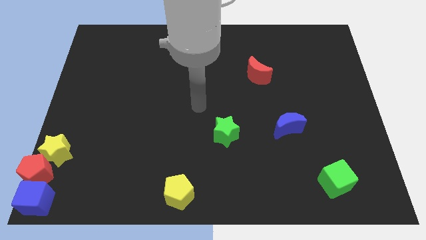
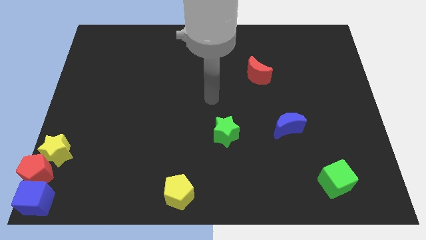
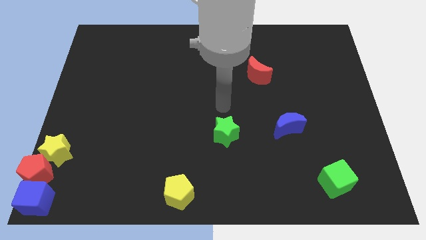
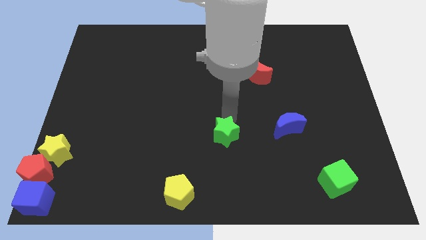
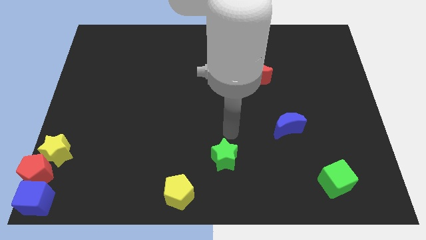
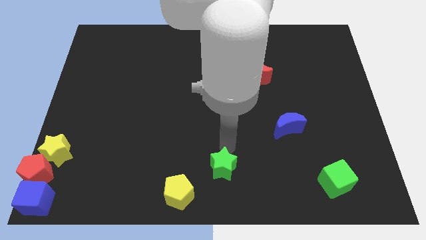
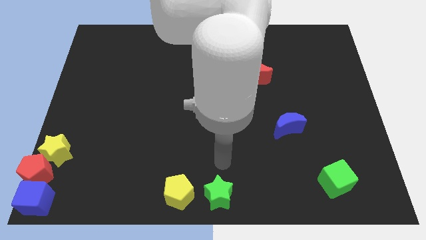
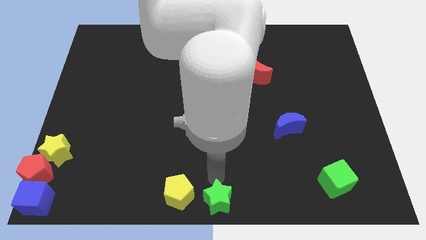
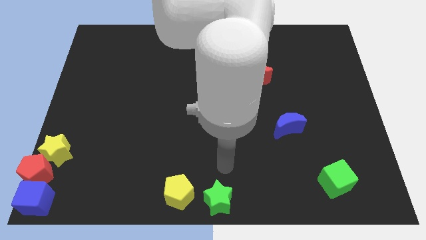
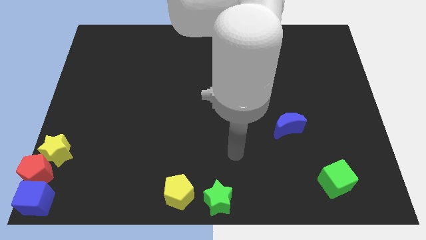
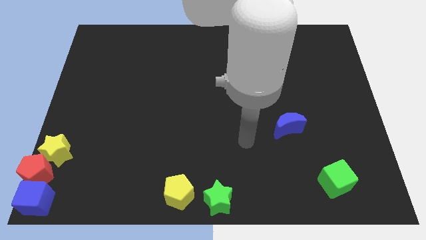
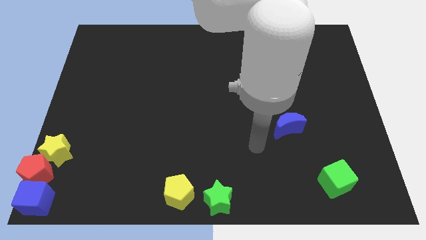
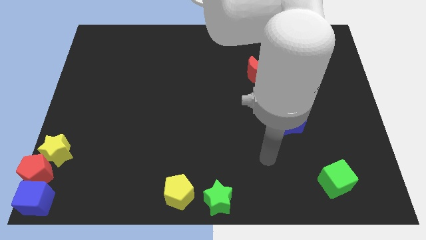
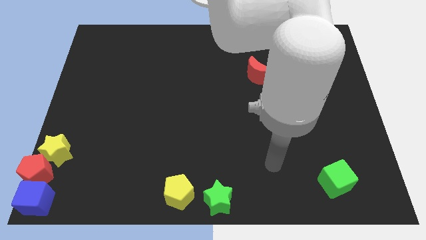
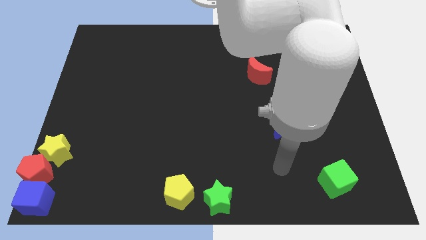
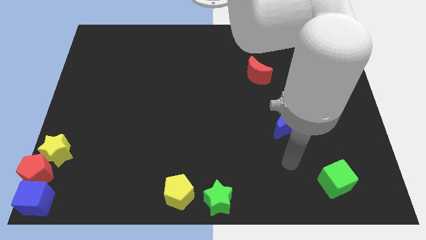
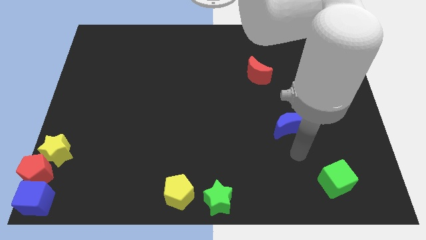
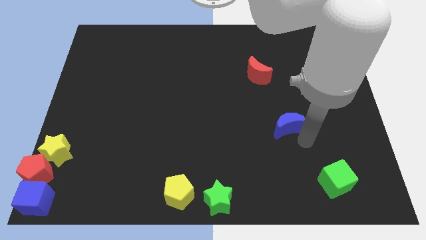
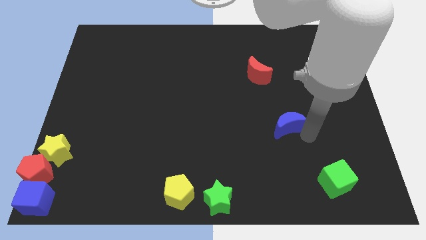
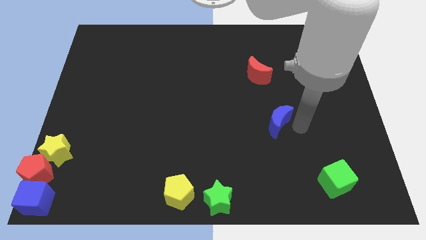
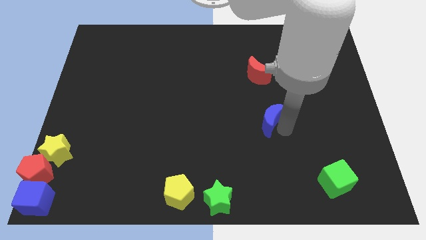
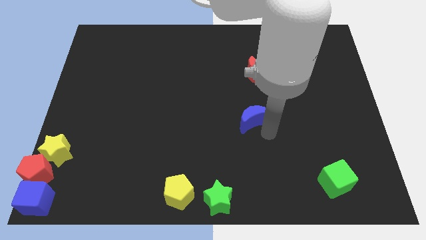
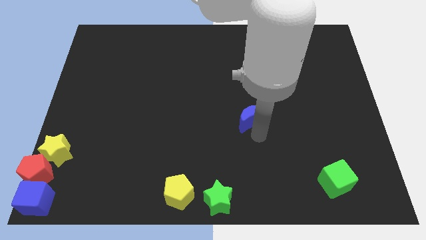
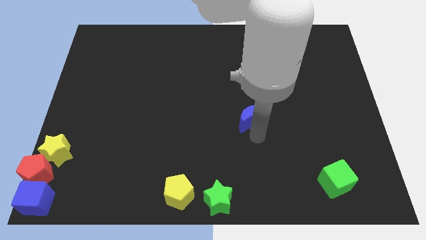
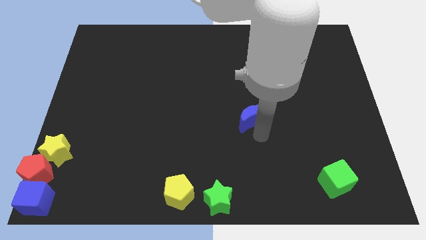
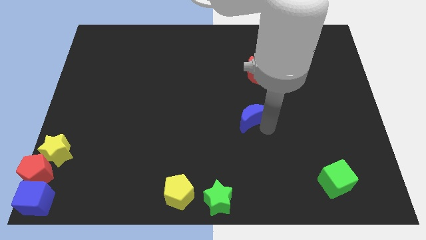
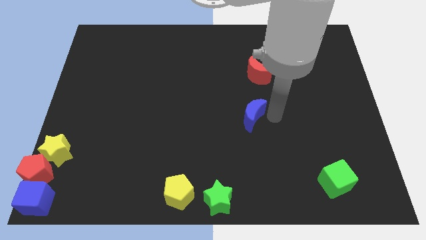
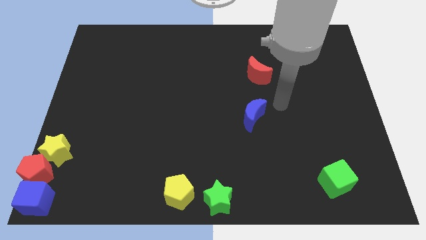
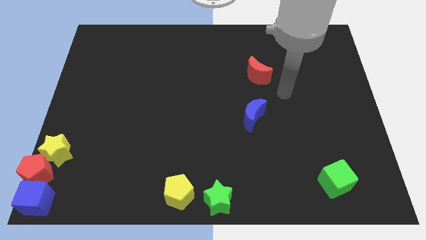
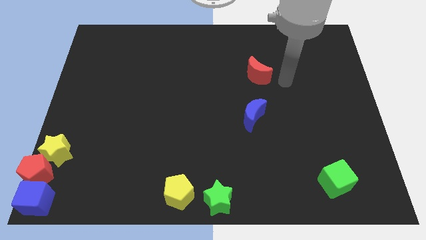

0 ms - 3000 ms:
push the green star to the bottom center of the board

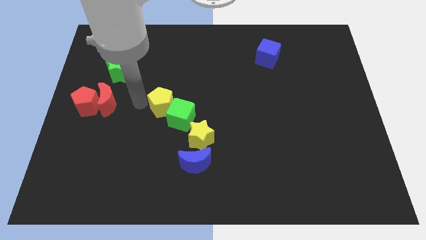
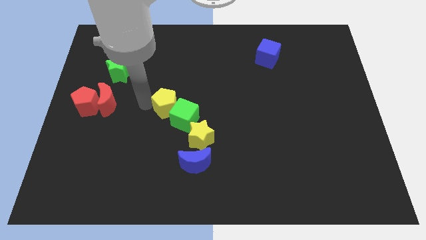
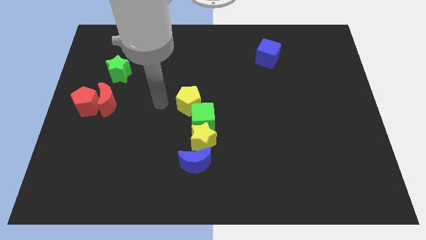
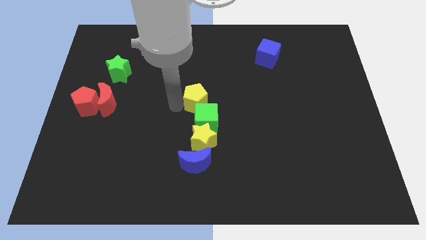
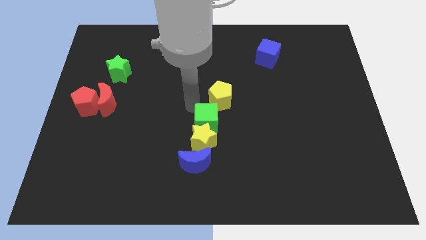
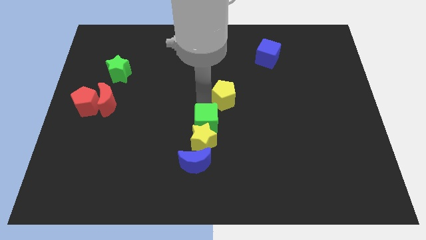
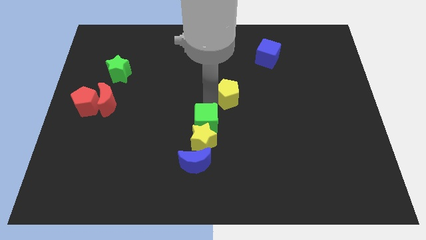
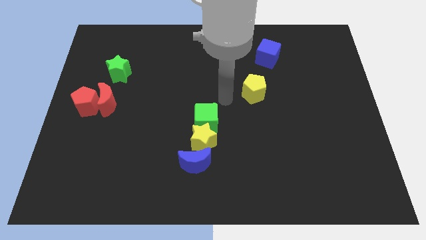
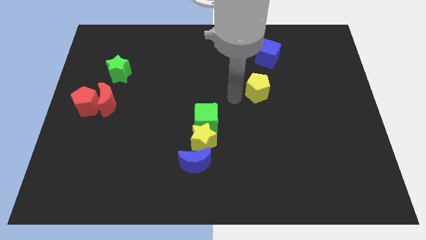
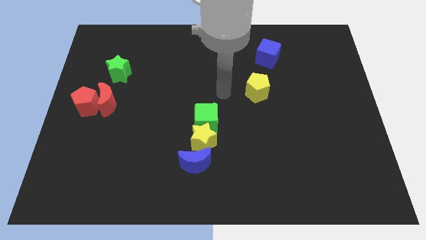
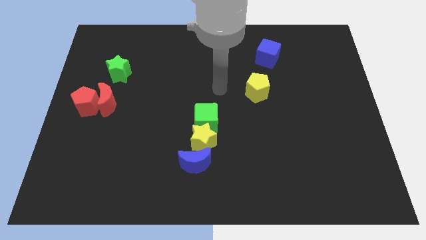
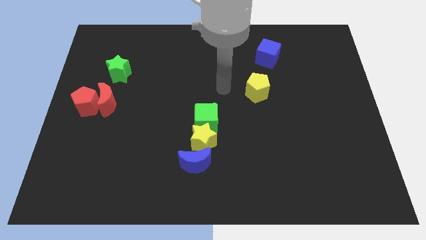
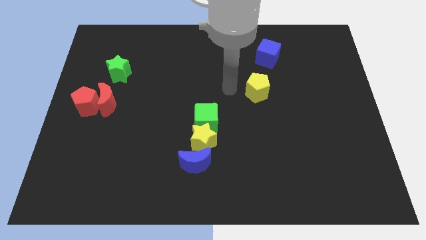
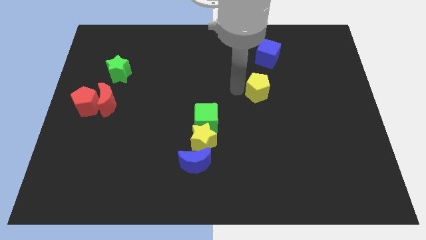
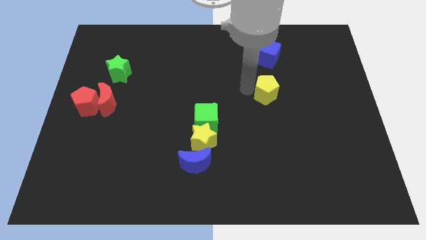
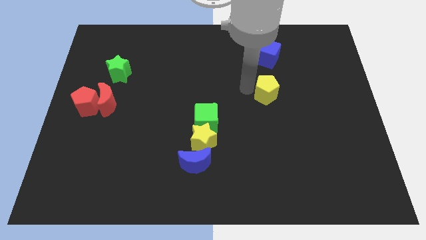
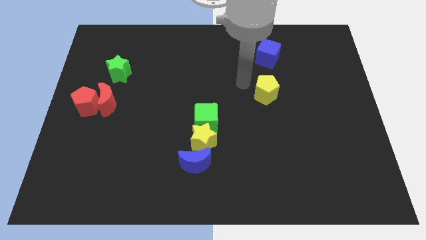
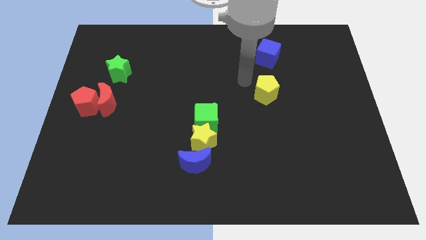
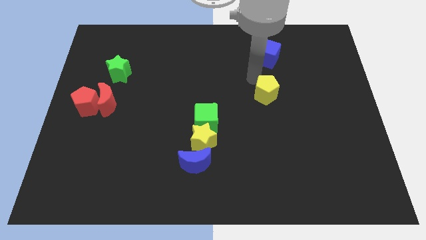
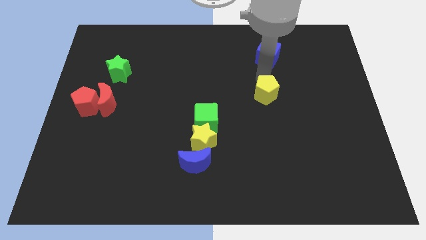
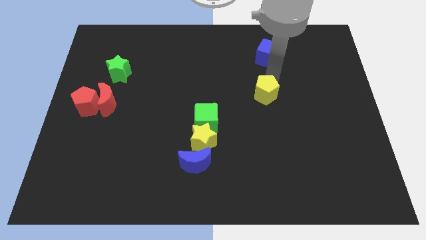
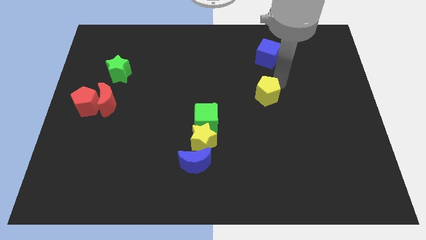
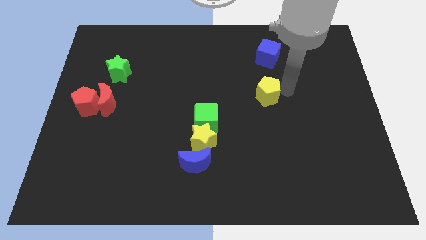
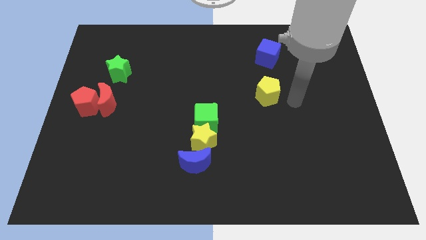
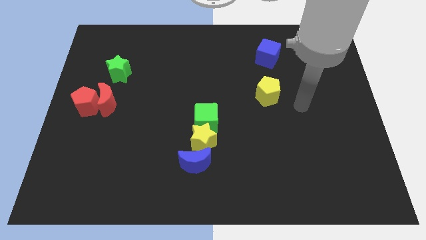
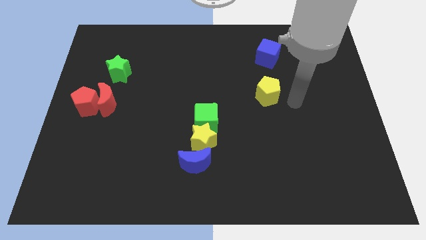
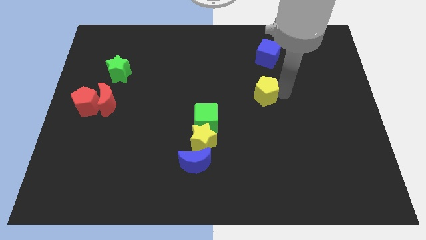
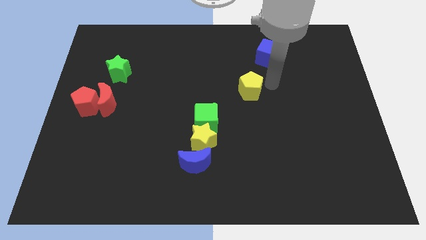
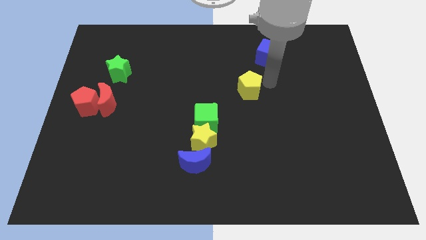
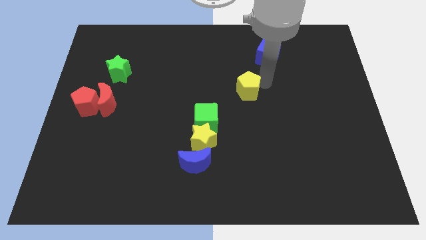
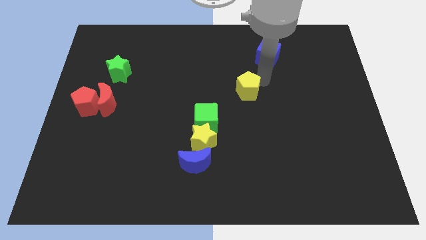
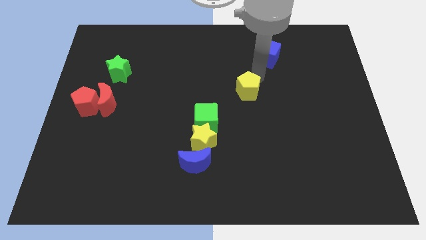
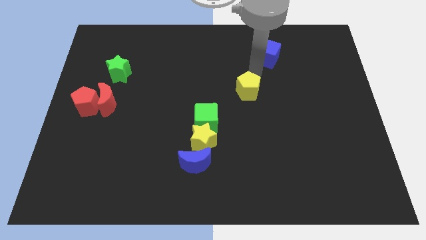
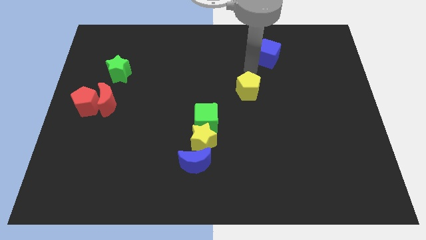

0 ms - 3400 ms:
push the yellow pentagon diagonally top right to green cube

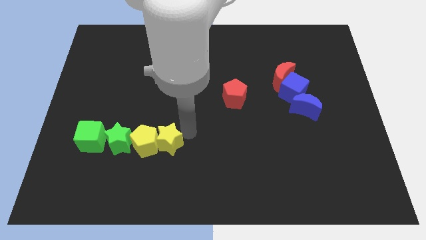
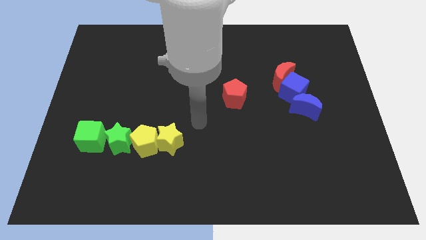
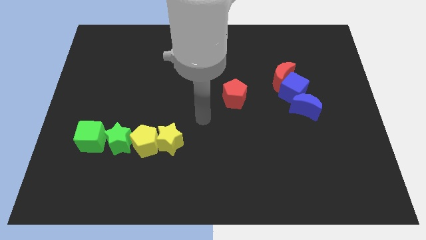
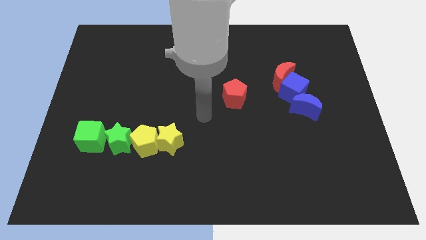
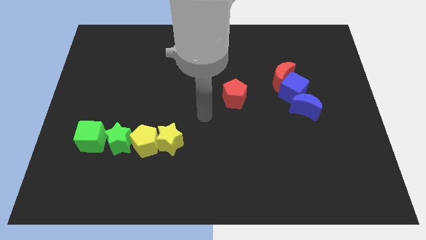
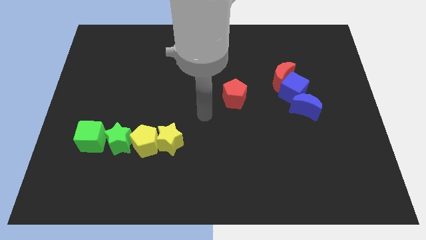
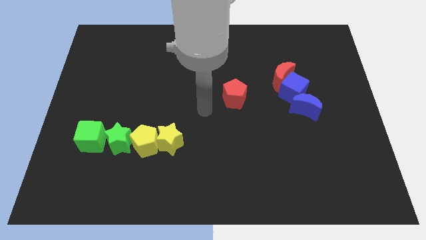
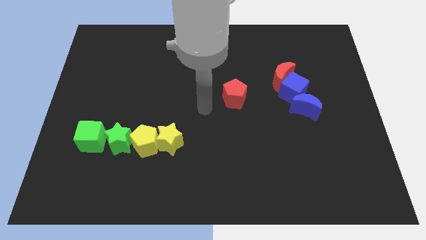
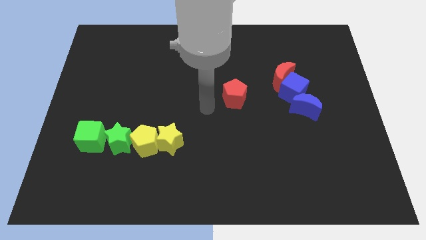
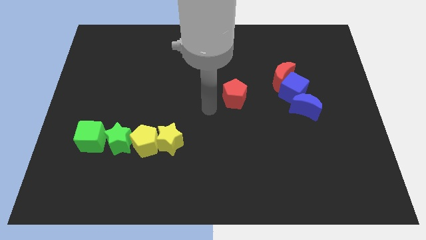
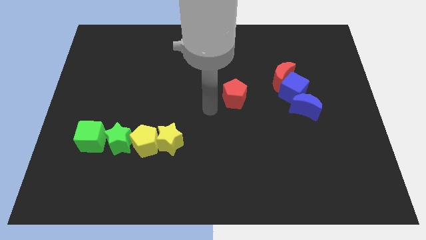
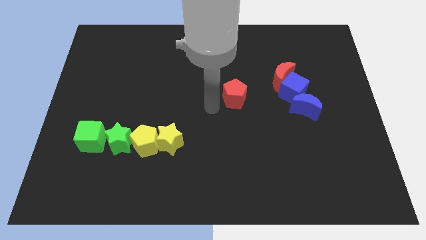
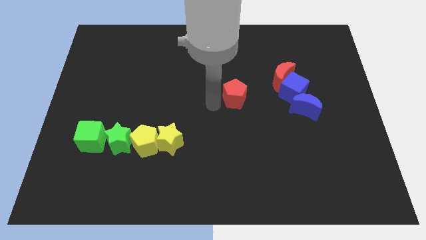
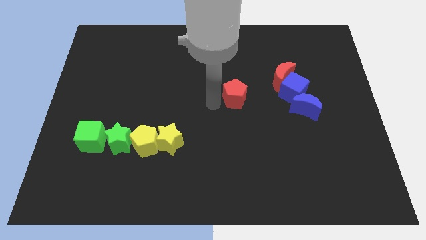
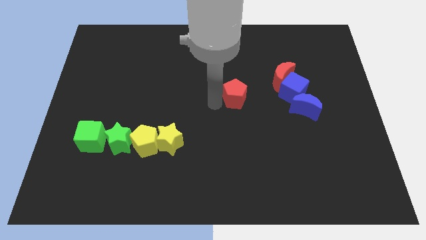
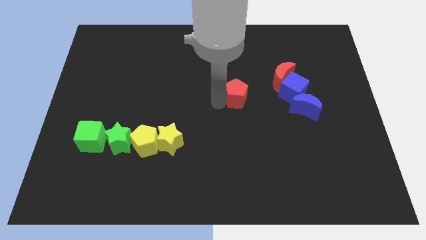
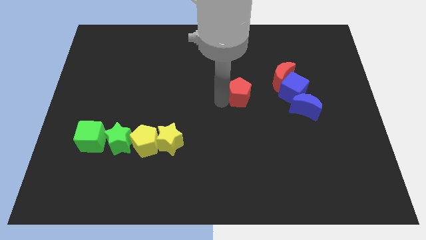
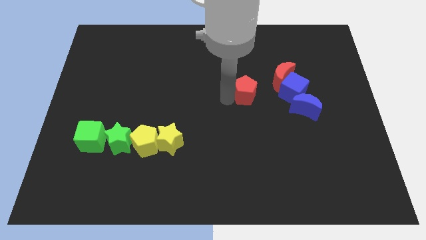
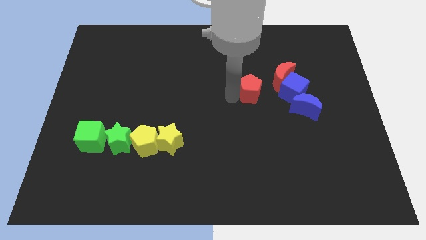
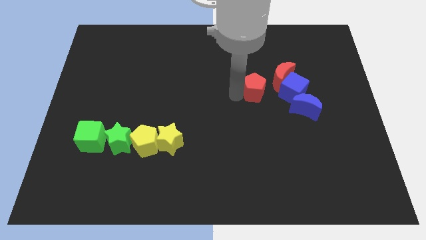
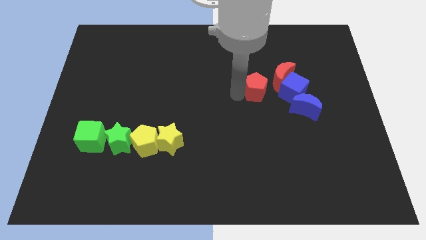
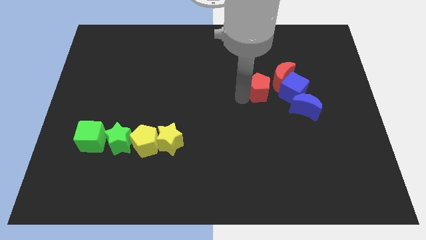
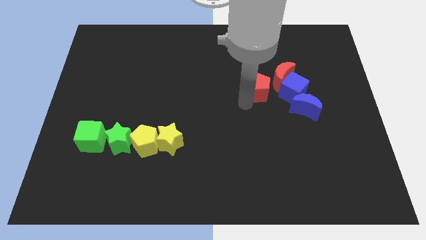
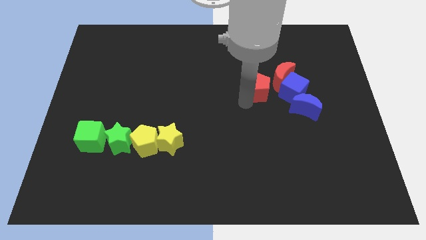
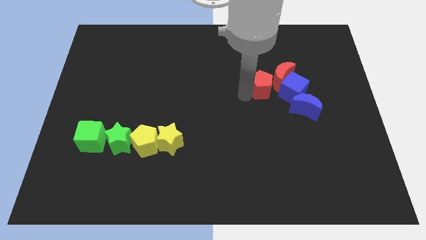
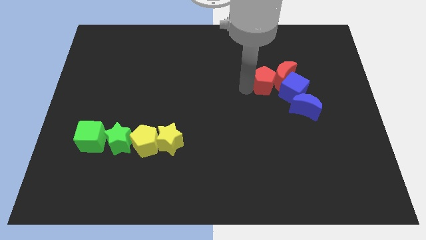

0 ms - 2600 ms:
push the red pentagon into the red moon
